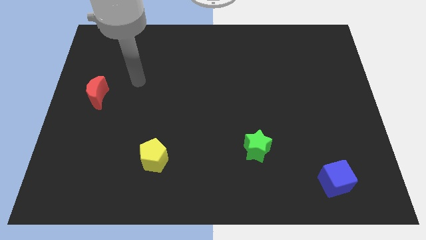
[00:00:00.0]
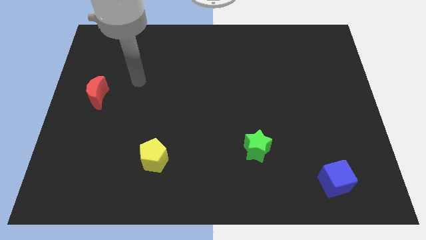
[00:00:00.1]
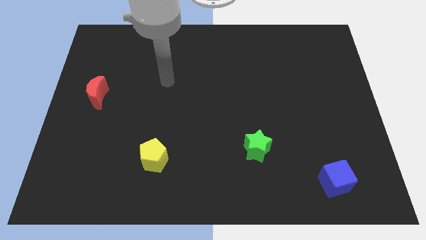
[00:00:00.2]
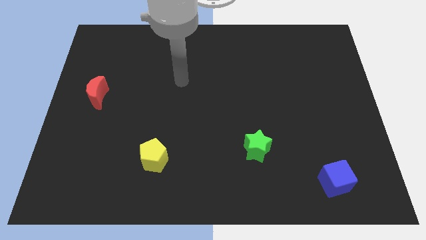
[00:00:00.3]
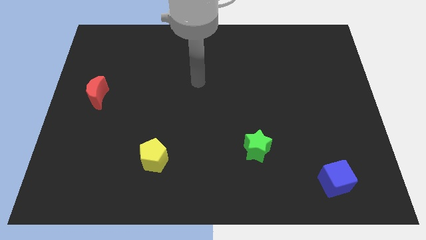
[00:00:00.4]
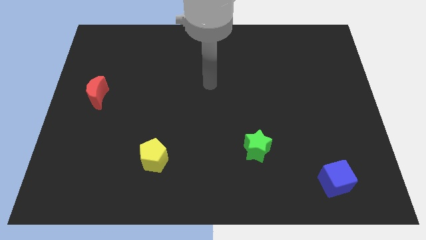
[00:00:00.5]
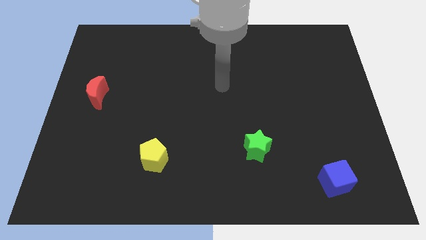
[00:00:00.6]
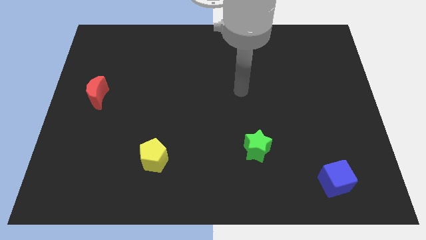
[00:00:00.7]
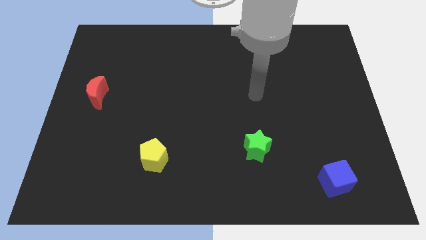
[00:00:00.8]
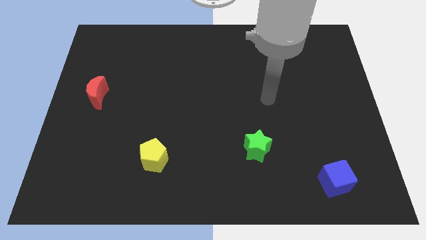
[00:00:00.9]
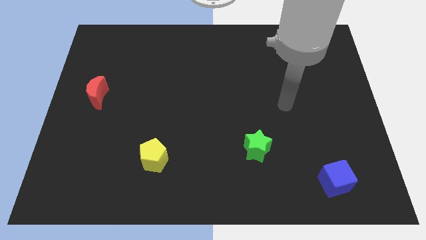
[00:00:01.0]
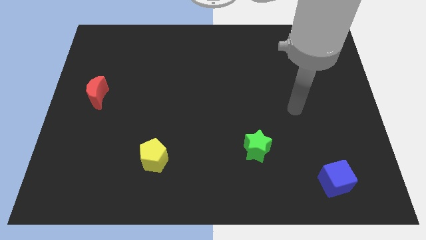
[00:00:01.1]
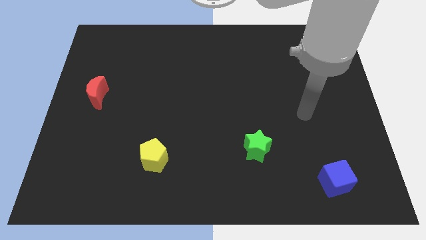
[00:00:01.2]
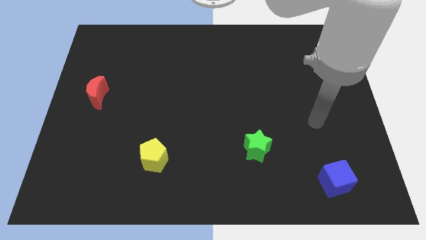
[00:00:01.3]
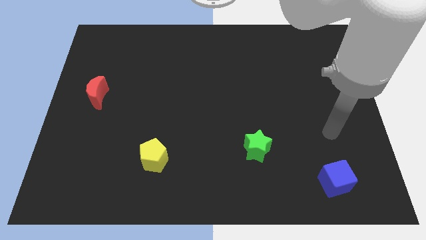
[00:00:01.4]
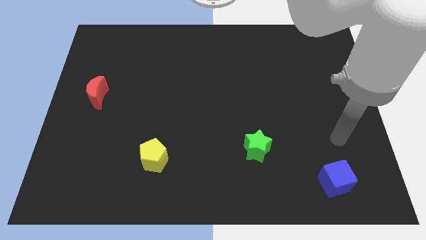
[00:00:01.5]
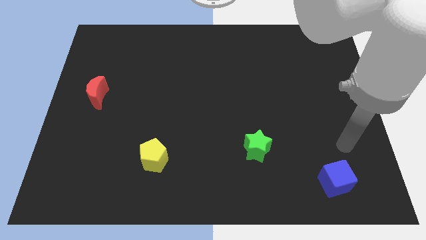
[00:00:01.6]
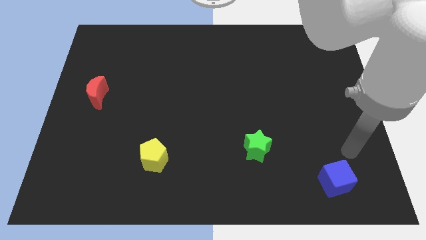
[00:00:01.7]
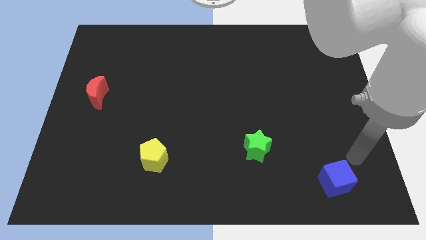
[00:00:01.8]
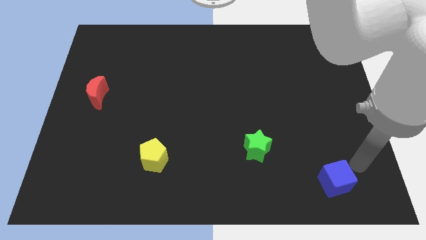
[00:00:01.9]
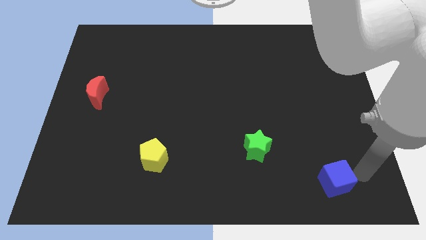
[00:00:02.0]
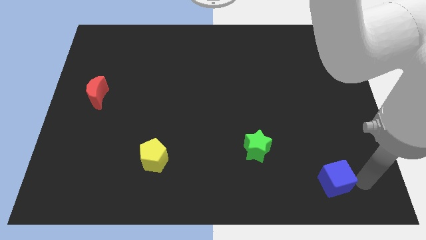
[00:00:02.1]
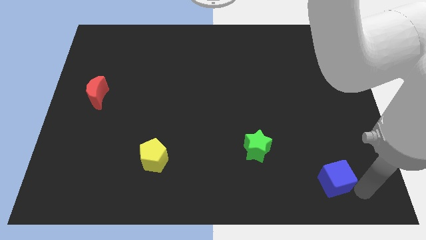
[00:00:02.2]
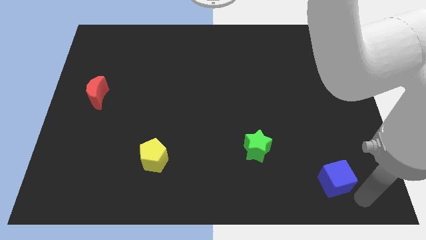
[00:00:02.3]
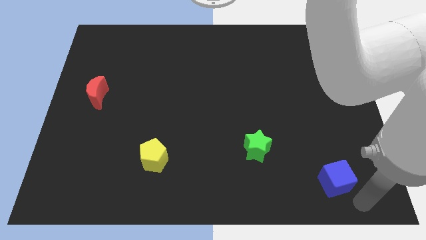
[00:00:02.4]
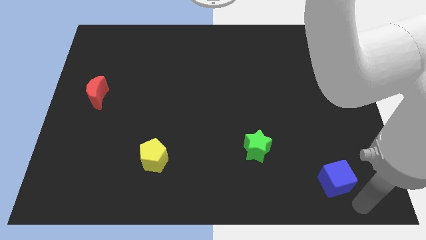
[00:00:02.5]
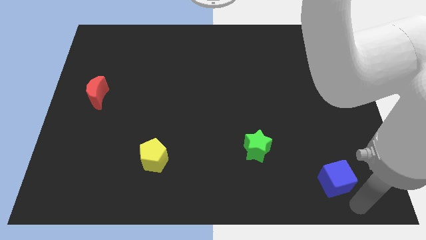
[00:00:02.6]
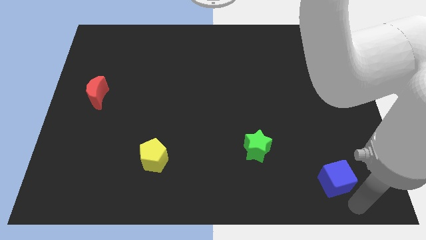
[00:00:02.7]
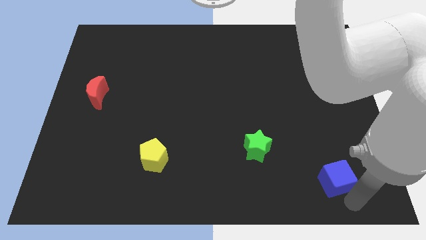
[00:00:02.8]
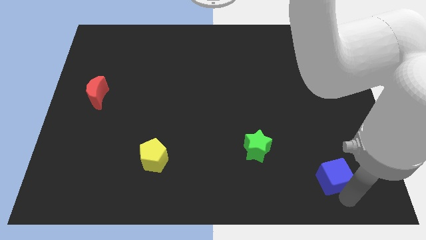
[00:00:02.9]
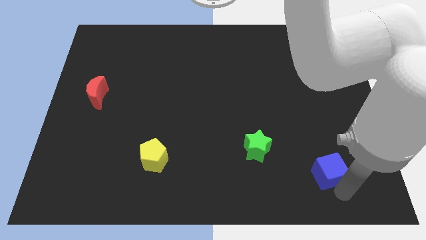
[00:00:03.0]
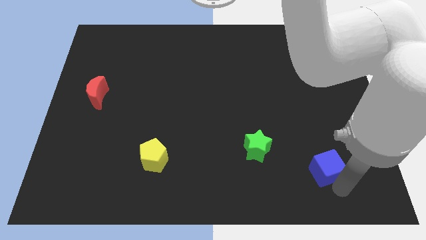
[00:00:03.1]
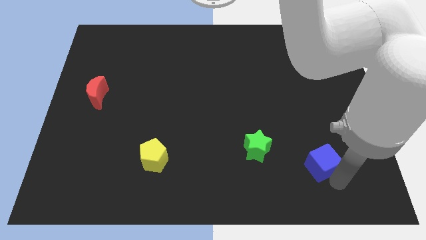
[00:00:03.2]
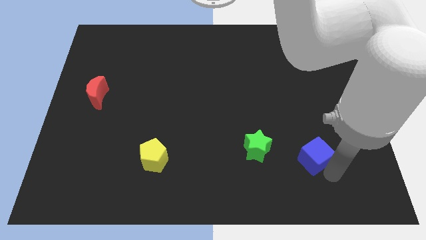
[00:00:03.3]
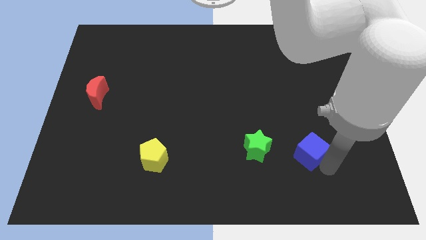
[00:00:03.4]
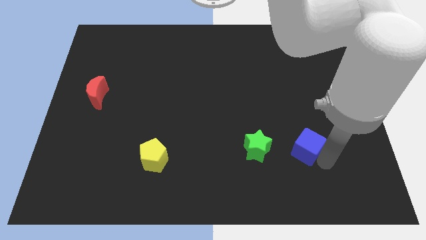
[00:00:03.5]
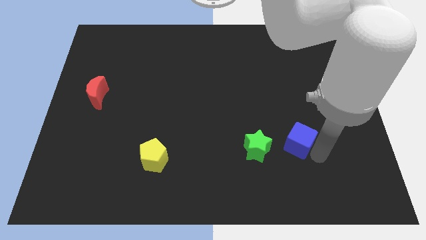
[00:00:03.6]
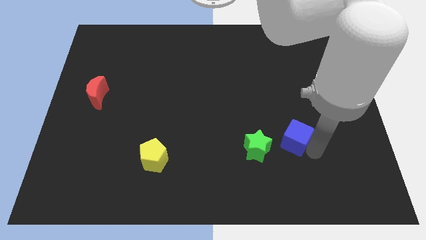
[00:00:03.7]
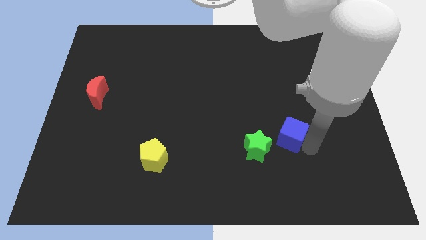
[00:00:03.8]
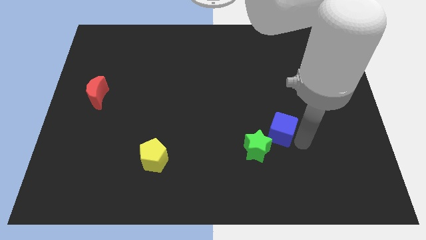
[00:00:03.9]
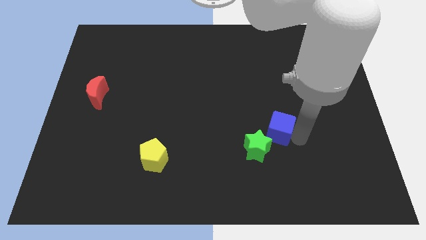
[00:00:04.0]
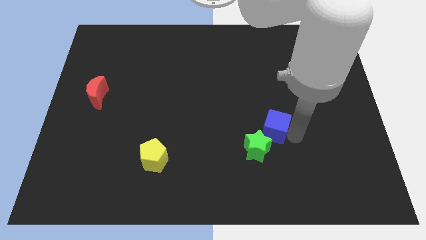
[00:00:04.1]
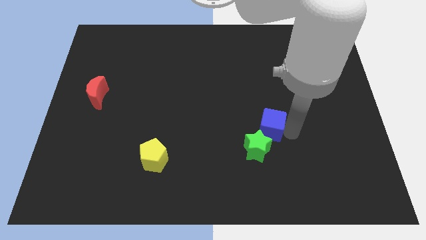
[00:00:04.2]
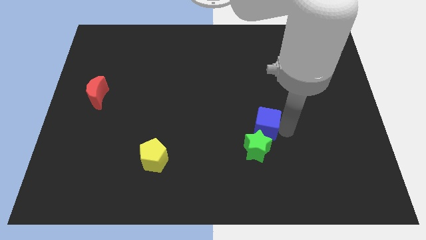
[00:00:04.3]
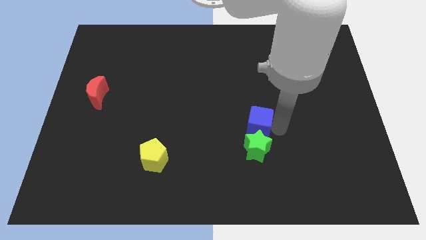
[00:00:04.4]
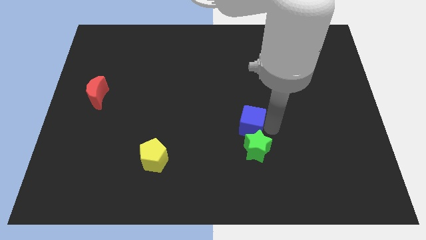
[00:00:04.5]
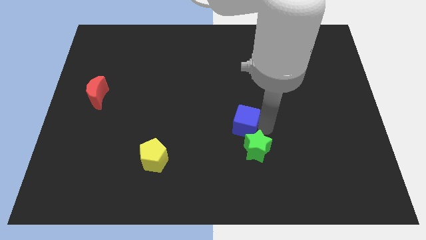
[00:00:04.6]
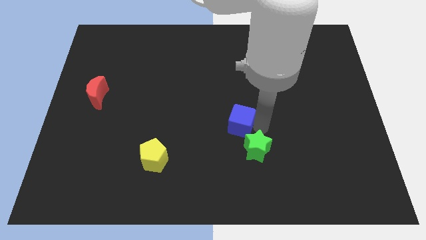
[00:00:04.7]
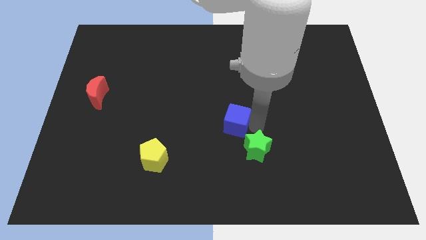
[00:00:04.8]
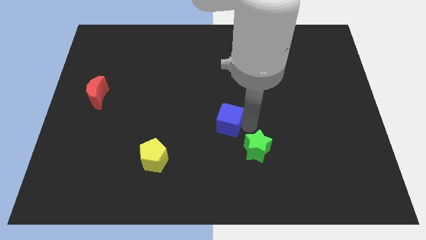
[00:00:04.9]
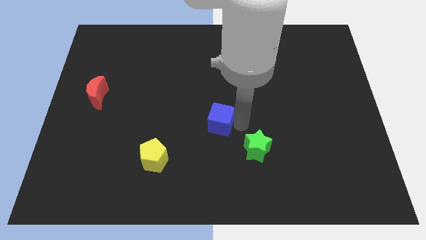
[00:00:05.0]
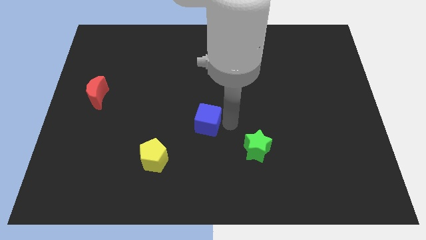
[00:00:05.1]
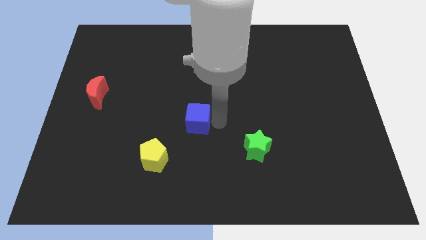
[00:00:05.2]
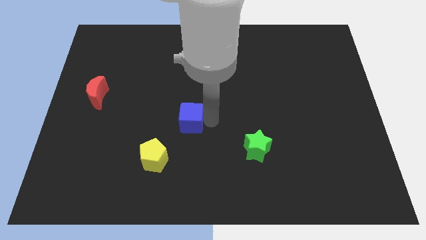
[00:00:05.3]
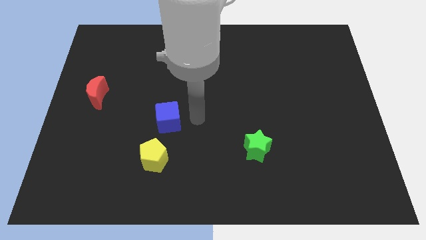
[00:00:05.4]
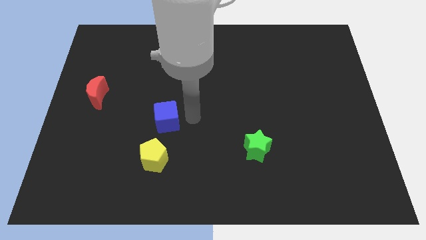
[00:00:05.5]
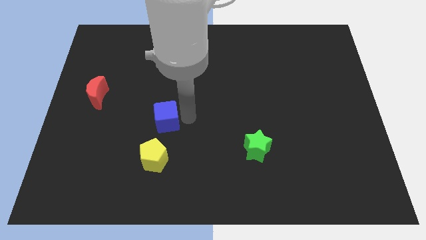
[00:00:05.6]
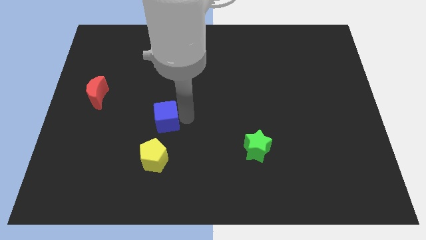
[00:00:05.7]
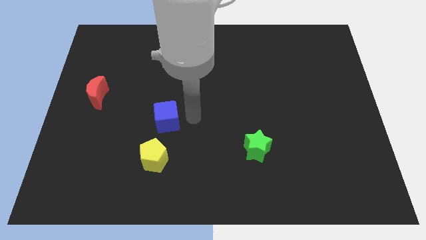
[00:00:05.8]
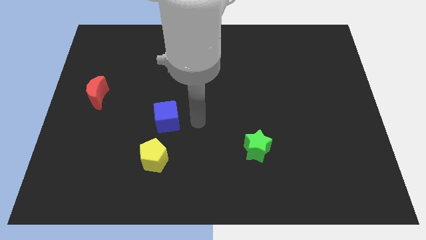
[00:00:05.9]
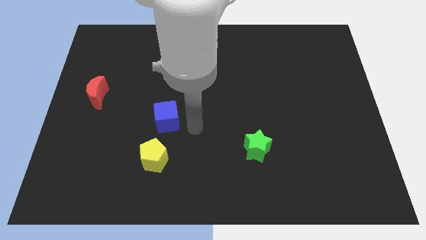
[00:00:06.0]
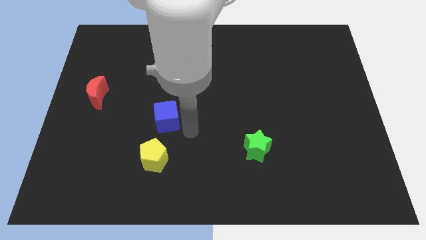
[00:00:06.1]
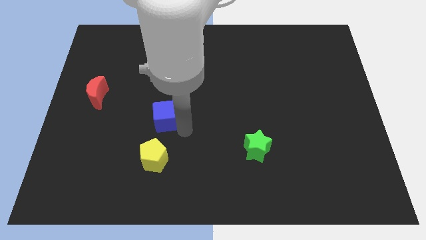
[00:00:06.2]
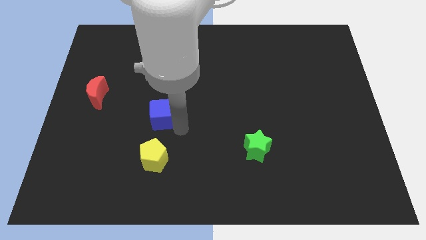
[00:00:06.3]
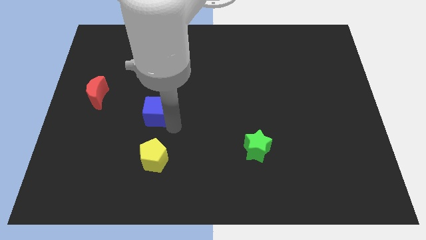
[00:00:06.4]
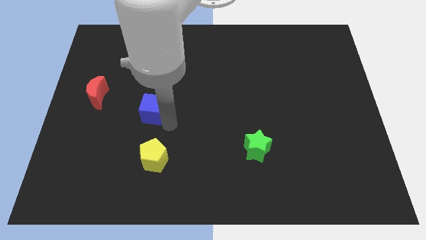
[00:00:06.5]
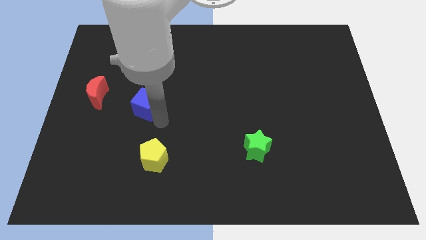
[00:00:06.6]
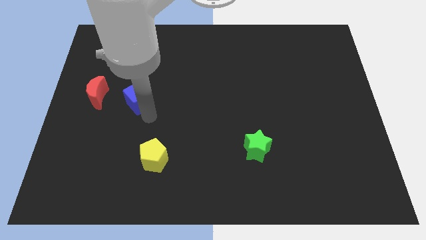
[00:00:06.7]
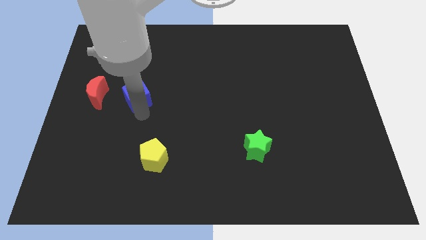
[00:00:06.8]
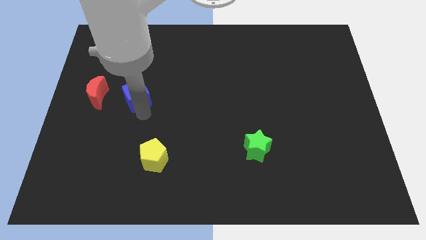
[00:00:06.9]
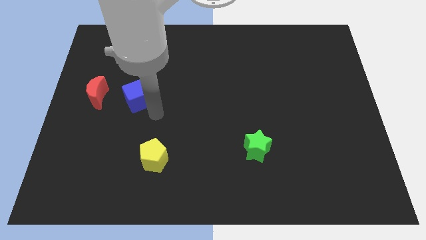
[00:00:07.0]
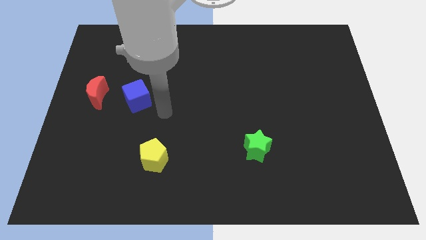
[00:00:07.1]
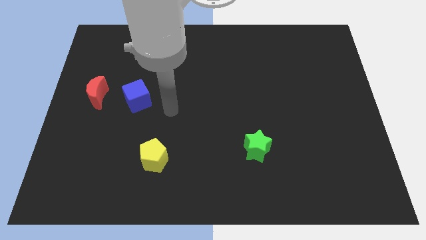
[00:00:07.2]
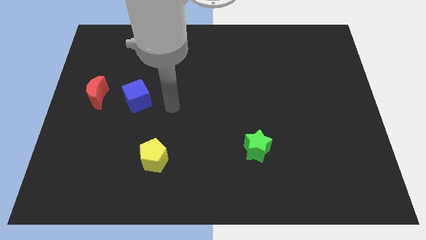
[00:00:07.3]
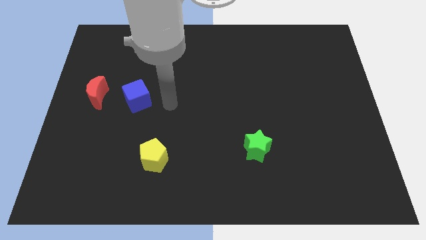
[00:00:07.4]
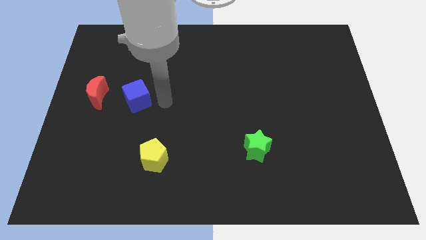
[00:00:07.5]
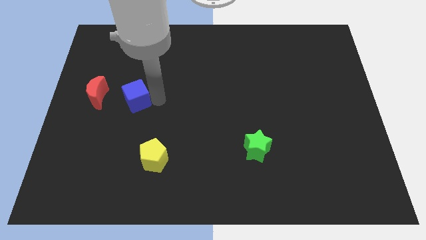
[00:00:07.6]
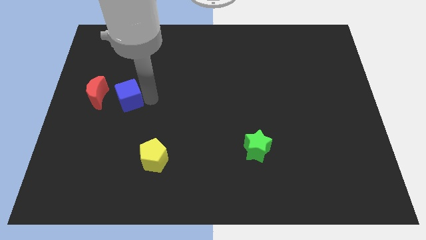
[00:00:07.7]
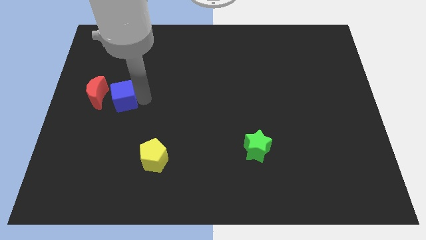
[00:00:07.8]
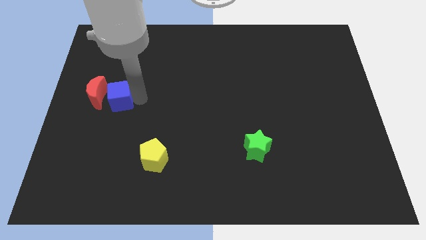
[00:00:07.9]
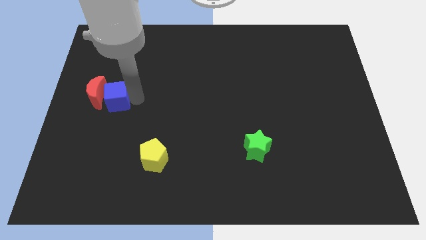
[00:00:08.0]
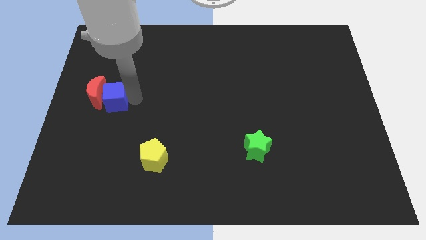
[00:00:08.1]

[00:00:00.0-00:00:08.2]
slide the blue cube next to the red moon
